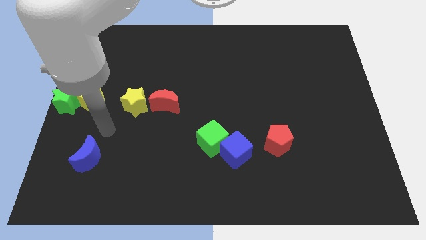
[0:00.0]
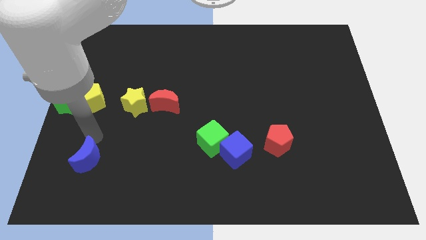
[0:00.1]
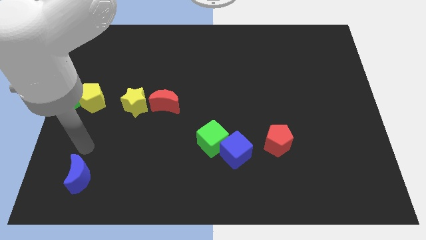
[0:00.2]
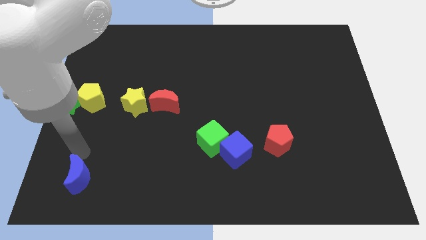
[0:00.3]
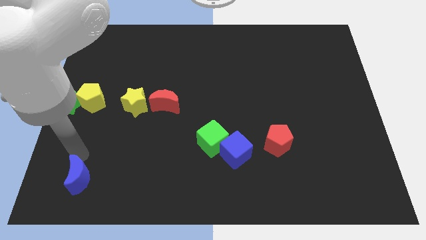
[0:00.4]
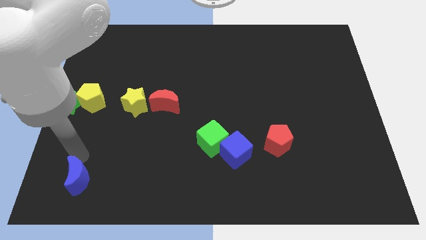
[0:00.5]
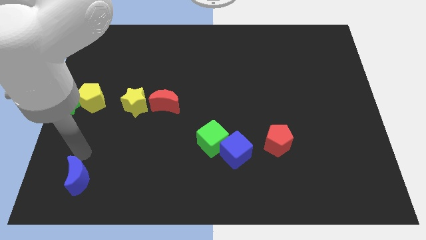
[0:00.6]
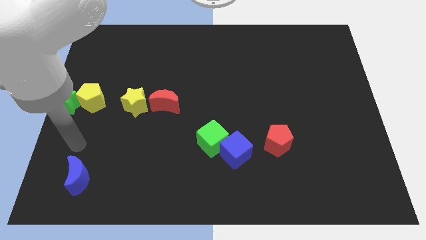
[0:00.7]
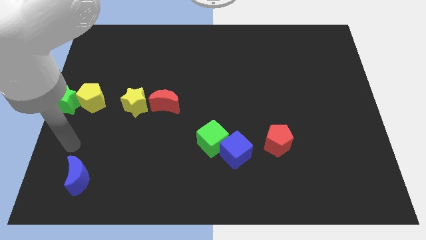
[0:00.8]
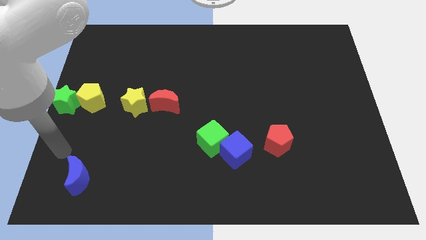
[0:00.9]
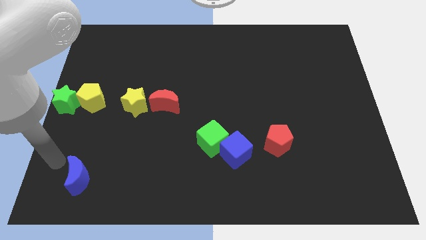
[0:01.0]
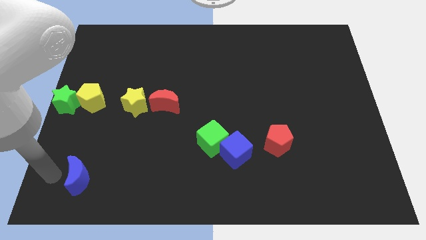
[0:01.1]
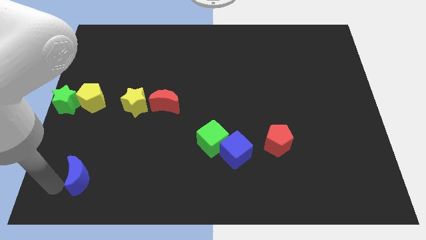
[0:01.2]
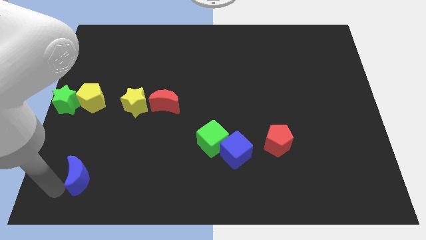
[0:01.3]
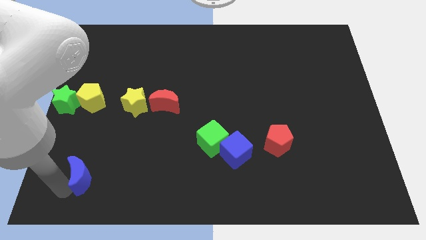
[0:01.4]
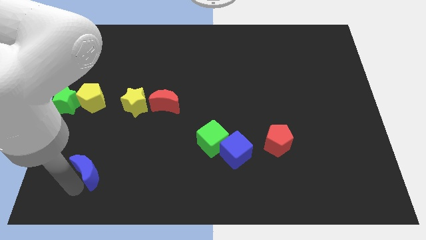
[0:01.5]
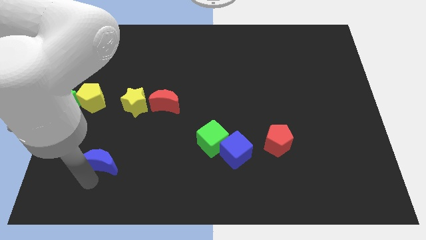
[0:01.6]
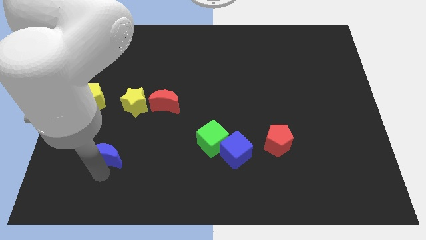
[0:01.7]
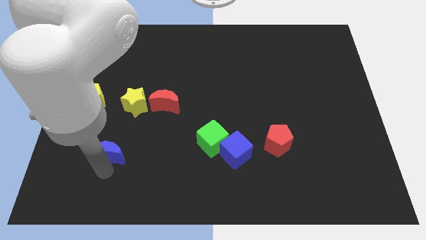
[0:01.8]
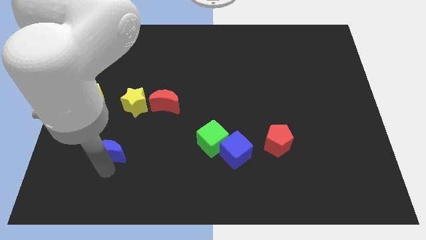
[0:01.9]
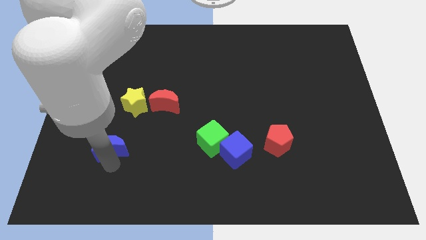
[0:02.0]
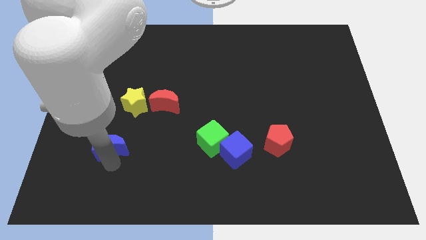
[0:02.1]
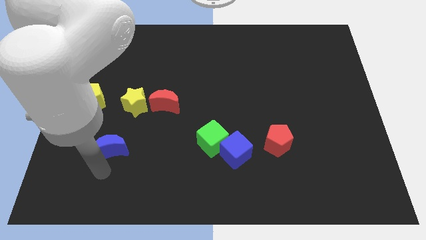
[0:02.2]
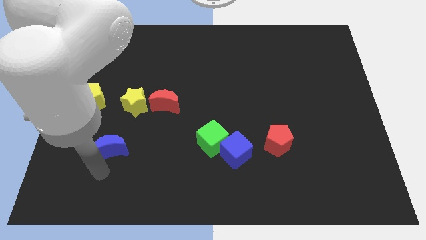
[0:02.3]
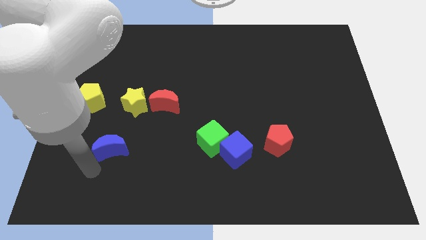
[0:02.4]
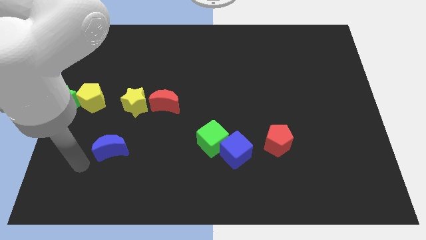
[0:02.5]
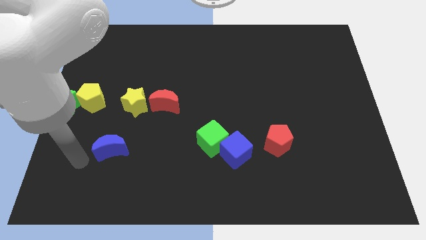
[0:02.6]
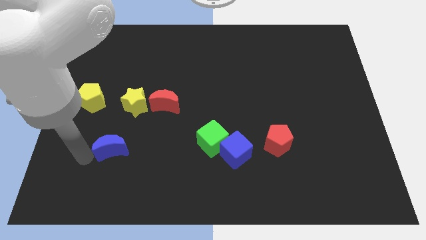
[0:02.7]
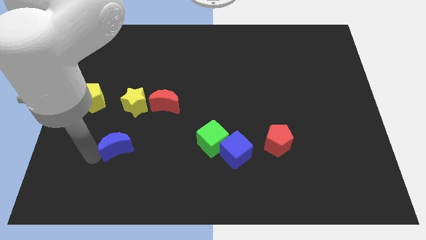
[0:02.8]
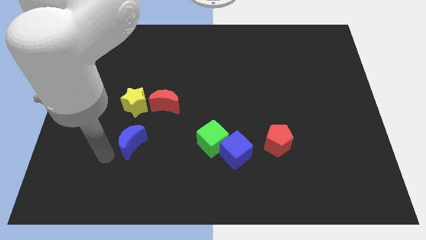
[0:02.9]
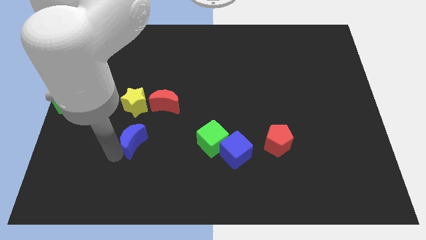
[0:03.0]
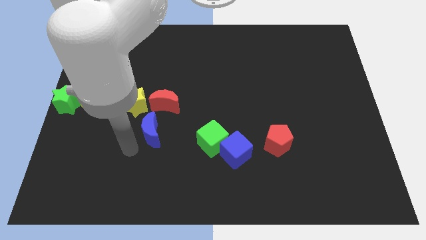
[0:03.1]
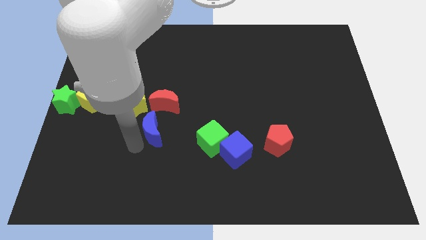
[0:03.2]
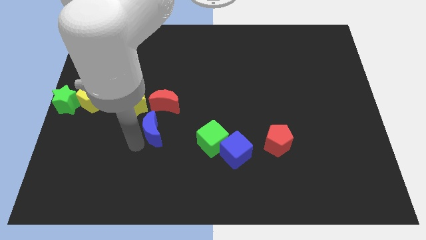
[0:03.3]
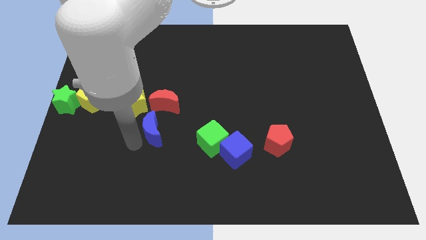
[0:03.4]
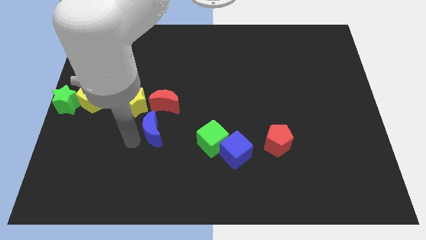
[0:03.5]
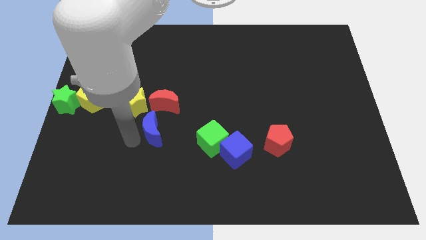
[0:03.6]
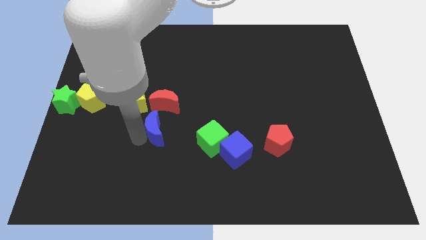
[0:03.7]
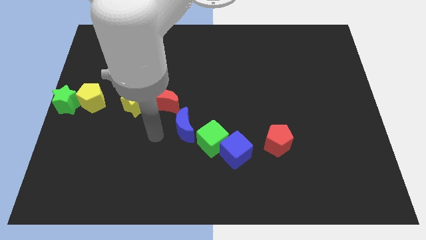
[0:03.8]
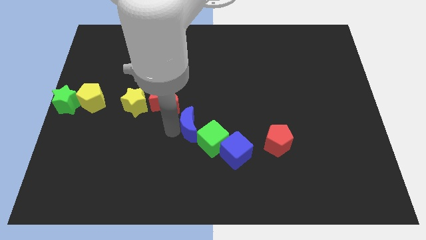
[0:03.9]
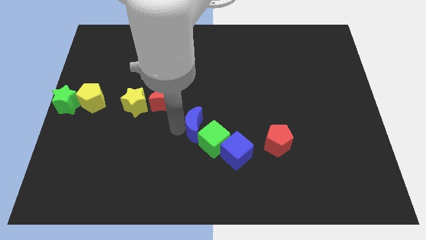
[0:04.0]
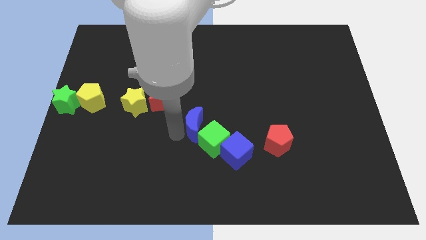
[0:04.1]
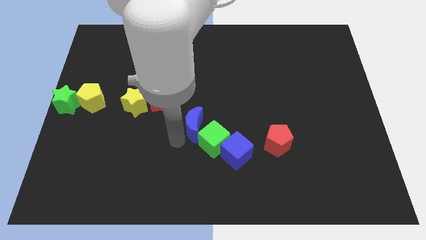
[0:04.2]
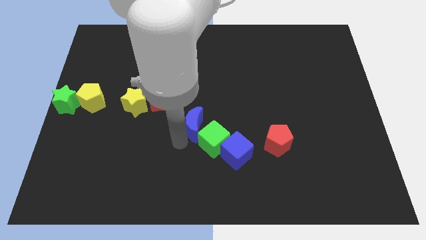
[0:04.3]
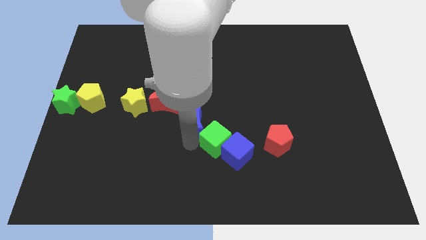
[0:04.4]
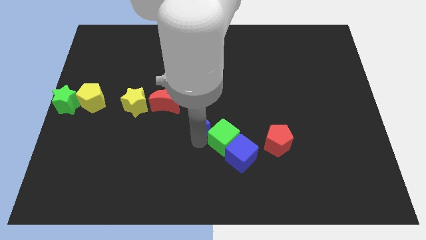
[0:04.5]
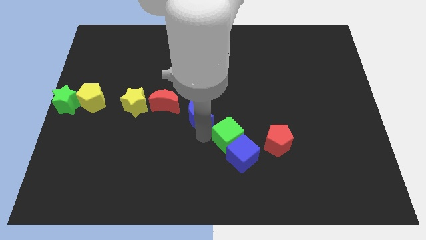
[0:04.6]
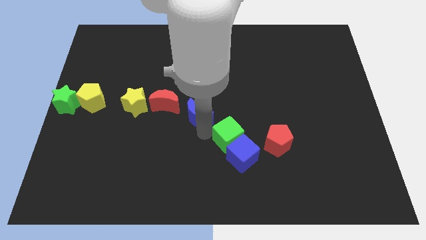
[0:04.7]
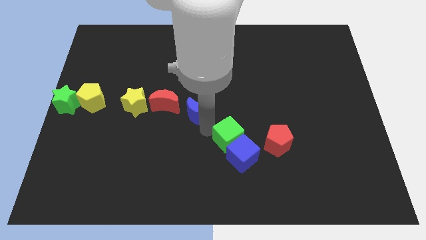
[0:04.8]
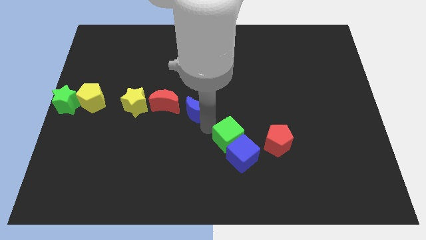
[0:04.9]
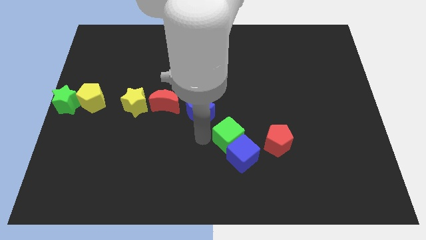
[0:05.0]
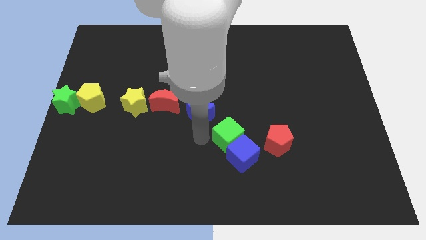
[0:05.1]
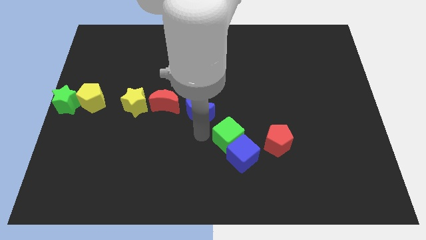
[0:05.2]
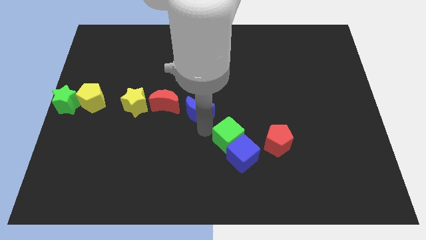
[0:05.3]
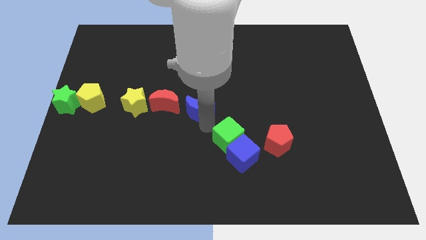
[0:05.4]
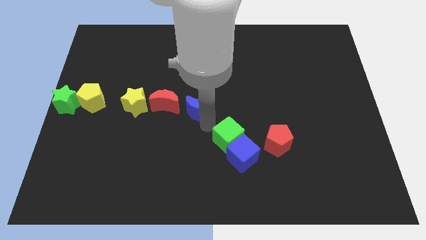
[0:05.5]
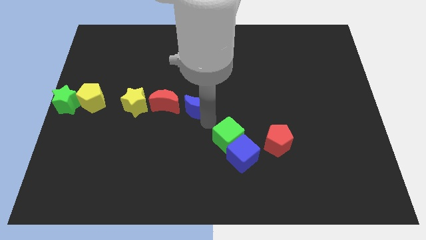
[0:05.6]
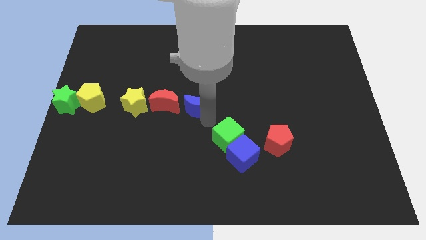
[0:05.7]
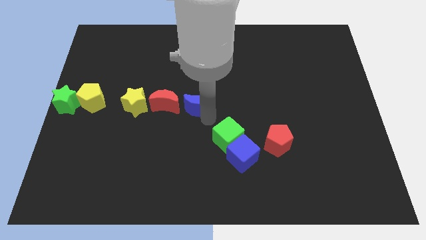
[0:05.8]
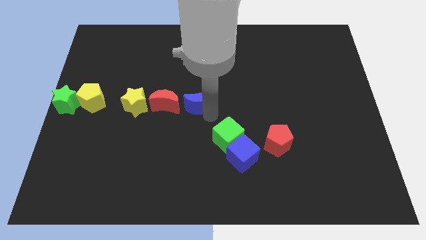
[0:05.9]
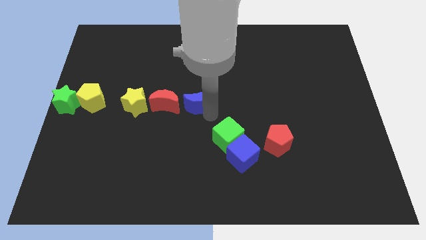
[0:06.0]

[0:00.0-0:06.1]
move the blue crescent to the center of the board

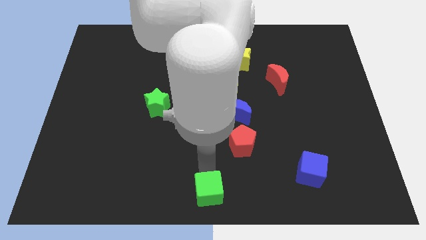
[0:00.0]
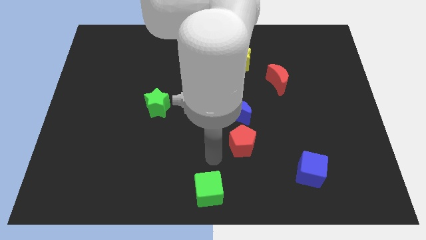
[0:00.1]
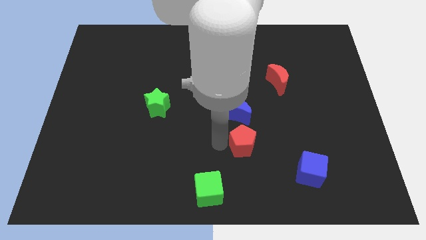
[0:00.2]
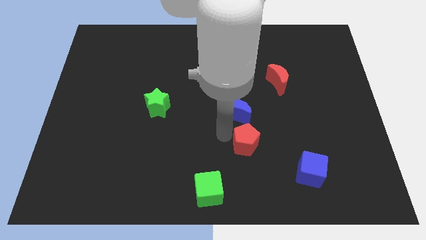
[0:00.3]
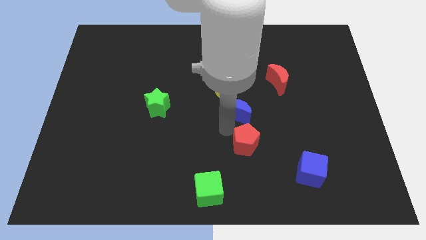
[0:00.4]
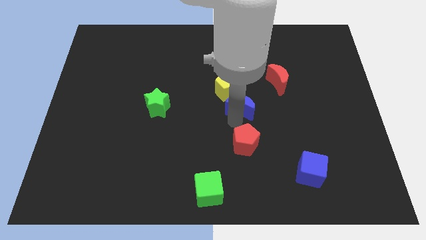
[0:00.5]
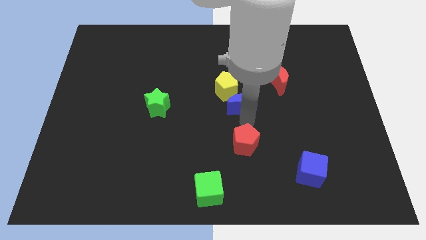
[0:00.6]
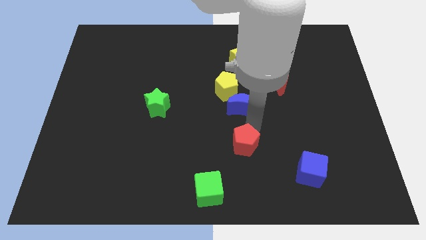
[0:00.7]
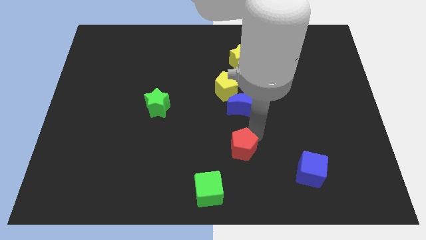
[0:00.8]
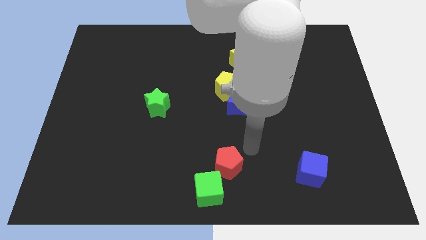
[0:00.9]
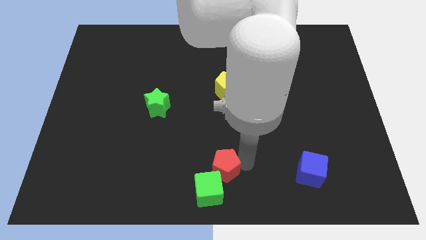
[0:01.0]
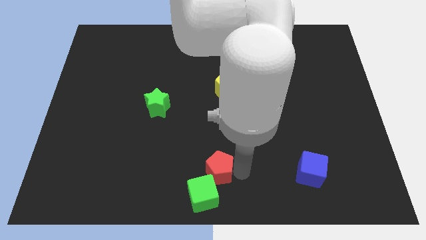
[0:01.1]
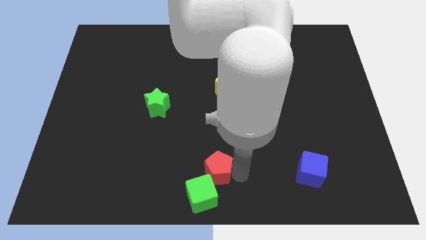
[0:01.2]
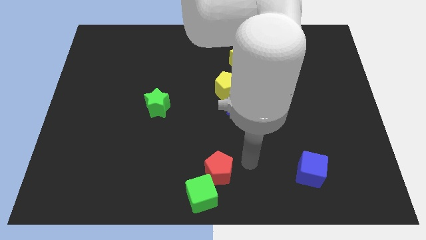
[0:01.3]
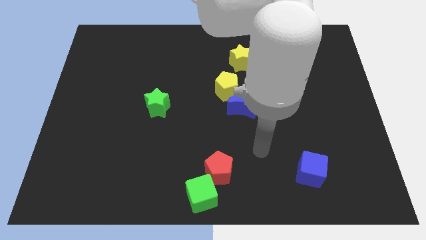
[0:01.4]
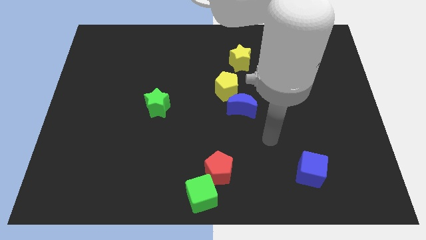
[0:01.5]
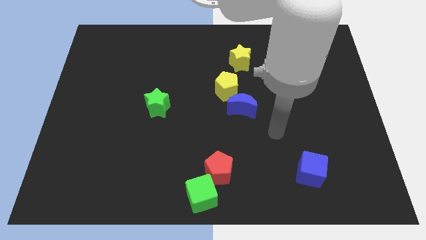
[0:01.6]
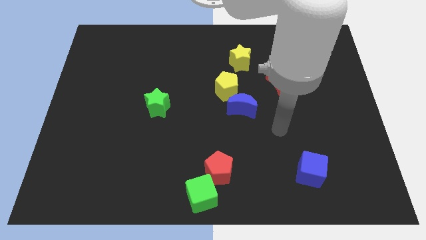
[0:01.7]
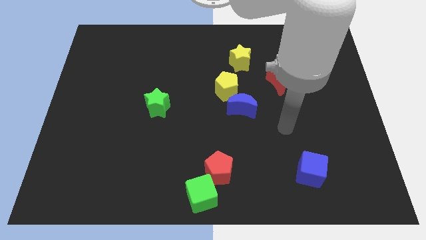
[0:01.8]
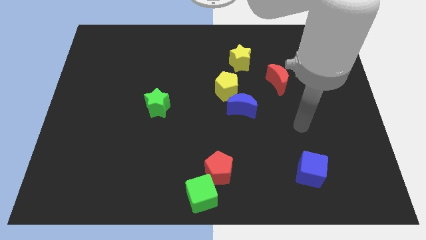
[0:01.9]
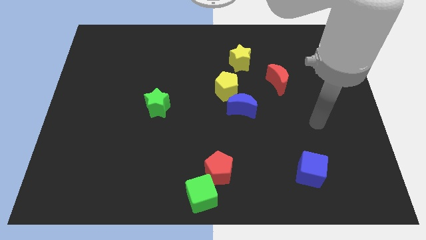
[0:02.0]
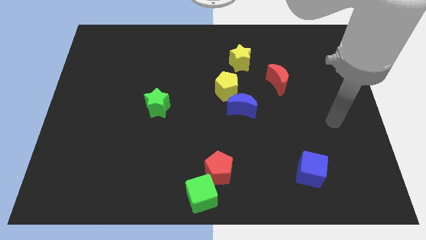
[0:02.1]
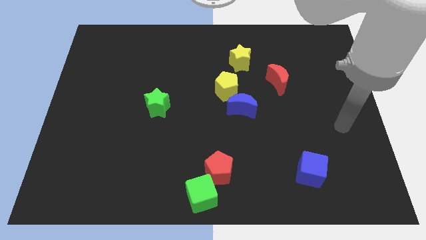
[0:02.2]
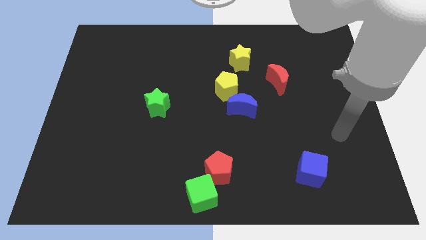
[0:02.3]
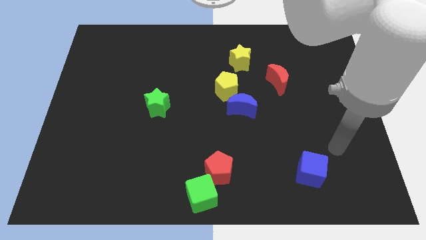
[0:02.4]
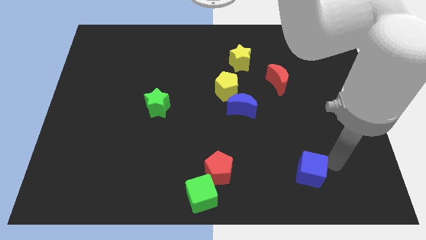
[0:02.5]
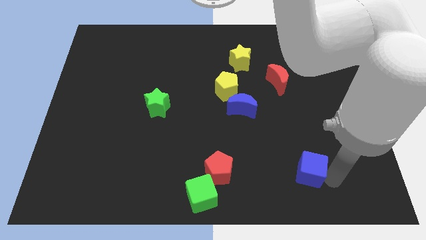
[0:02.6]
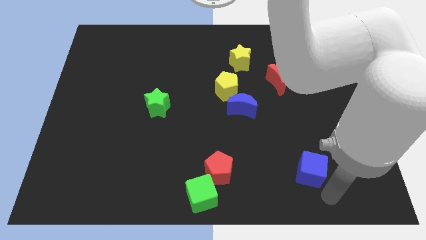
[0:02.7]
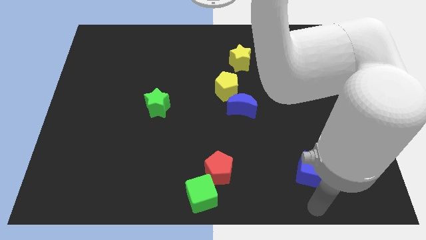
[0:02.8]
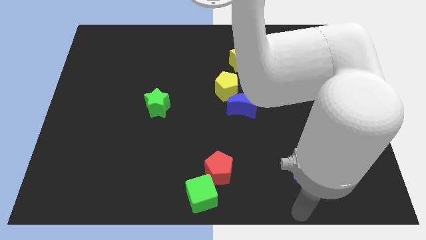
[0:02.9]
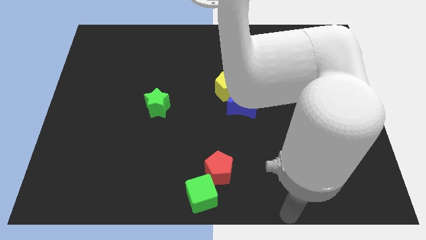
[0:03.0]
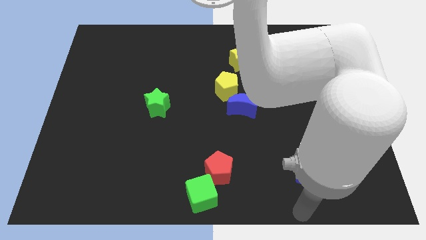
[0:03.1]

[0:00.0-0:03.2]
move the red pentagon towards the top right of the green cube
